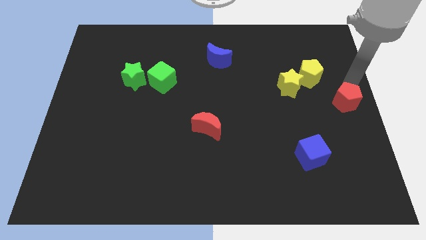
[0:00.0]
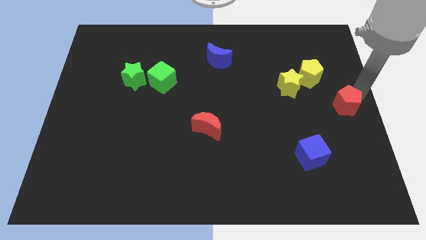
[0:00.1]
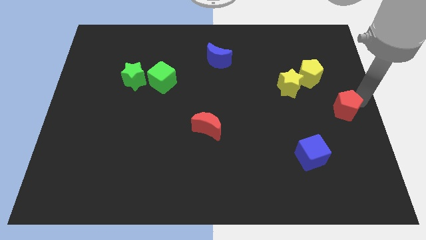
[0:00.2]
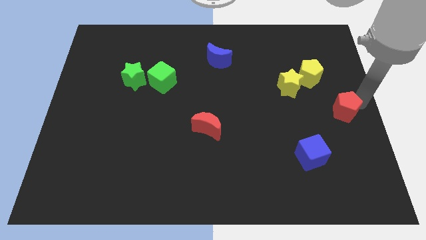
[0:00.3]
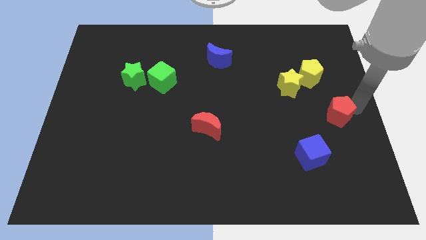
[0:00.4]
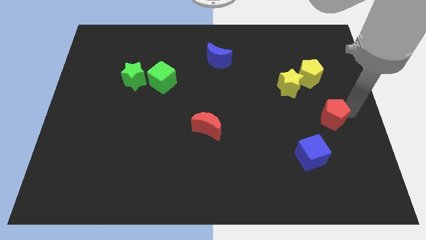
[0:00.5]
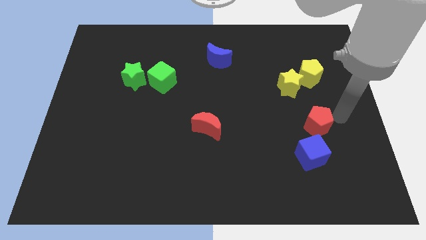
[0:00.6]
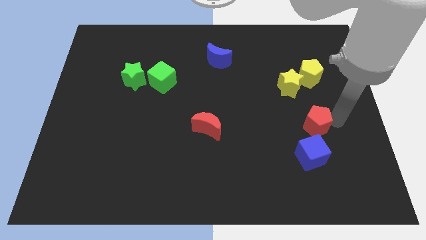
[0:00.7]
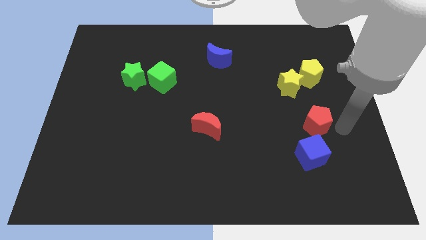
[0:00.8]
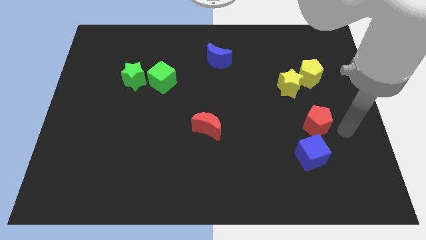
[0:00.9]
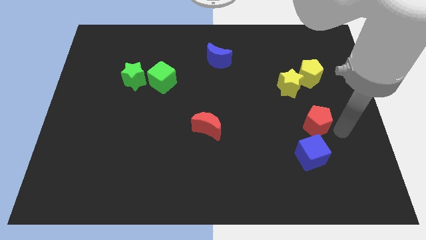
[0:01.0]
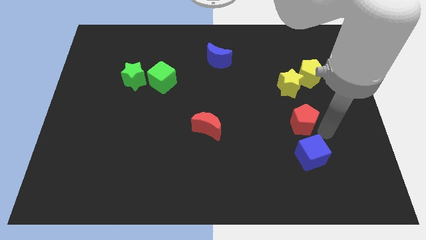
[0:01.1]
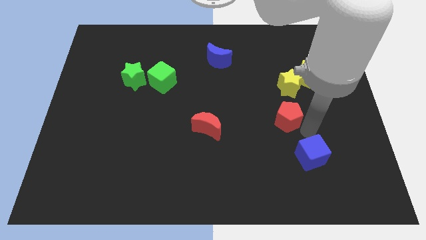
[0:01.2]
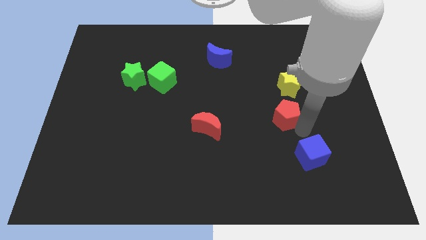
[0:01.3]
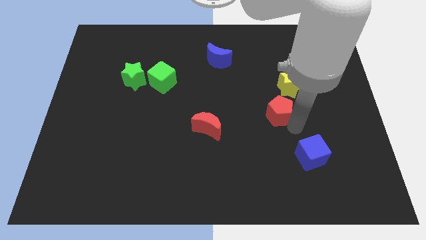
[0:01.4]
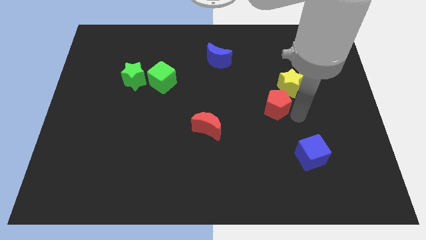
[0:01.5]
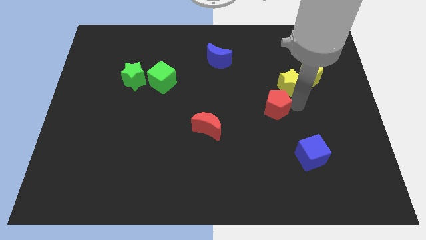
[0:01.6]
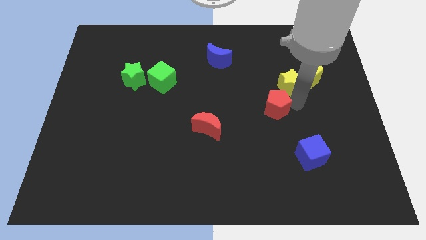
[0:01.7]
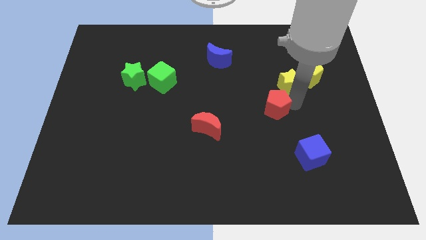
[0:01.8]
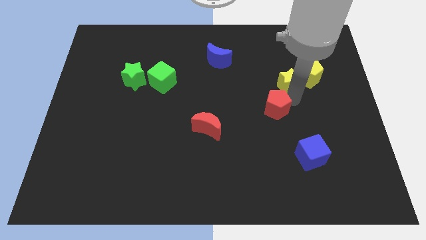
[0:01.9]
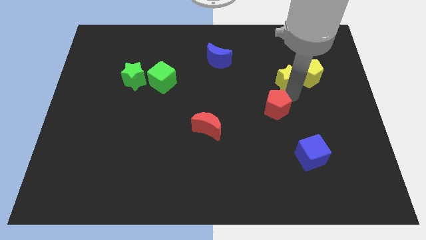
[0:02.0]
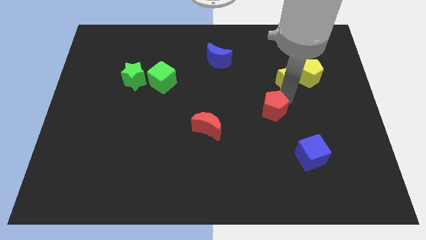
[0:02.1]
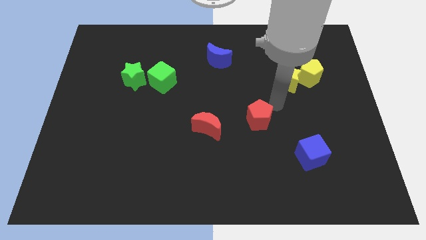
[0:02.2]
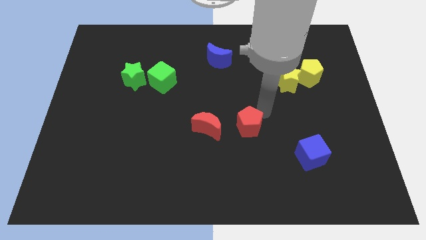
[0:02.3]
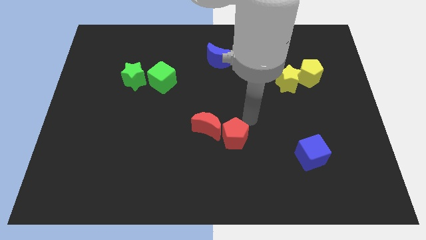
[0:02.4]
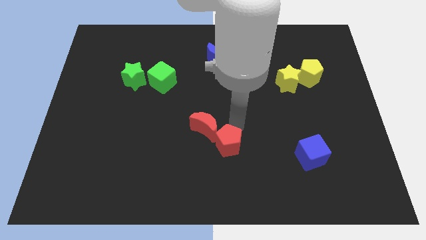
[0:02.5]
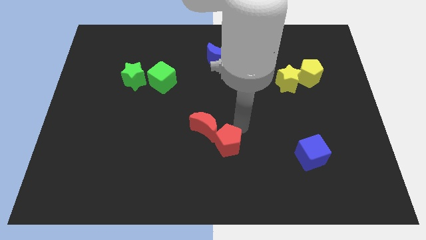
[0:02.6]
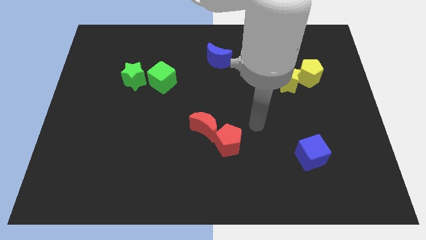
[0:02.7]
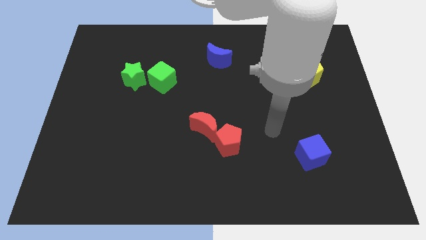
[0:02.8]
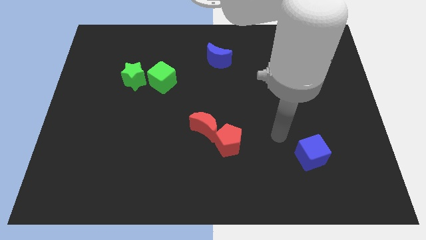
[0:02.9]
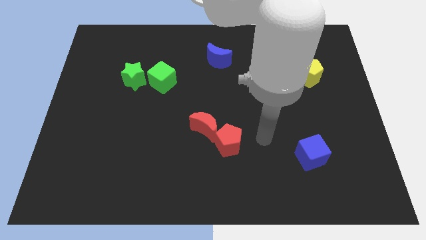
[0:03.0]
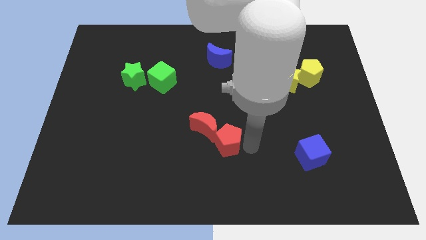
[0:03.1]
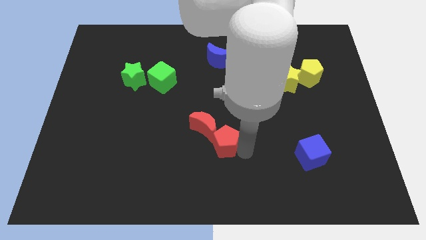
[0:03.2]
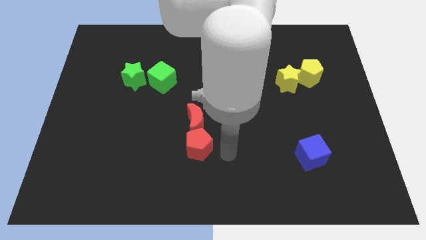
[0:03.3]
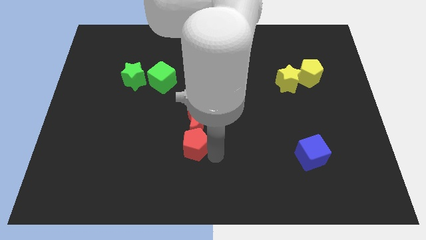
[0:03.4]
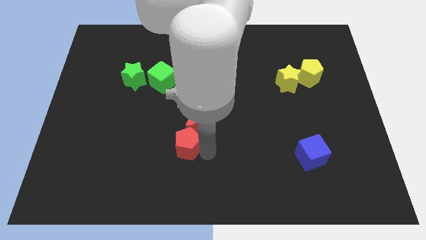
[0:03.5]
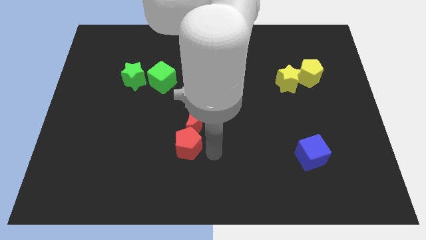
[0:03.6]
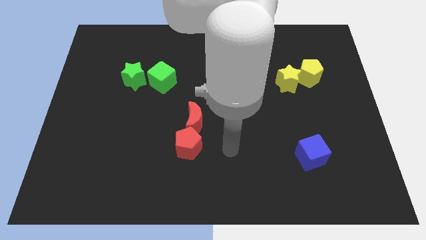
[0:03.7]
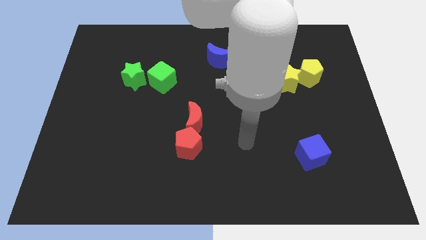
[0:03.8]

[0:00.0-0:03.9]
push the red pentagon to the bottom of red crescent

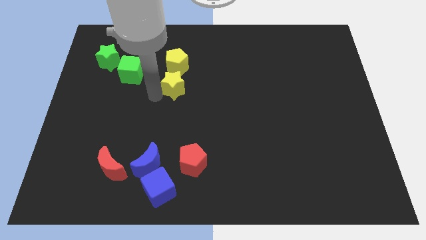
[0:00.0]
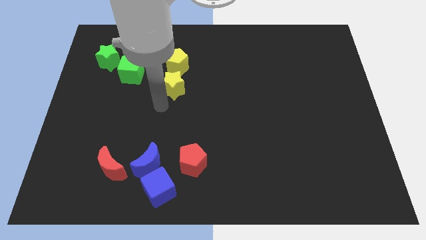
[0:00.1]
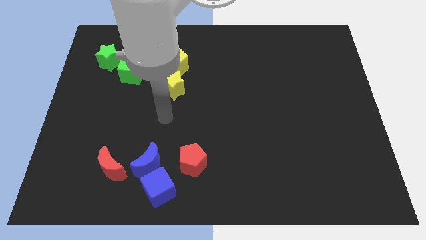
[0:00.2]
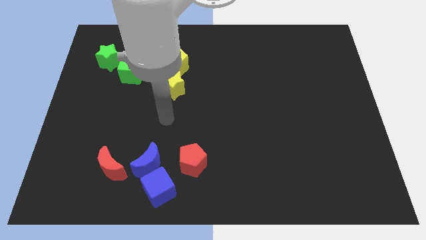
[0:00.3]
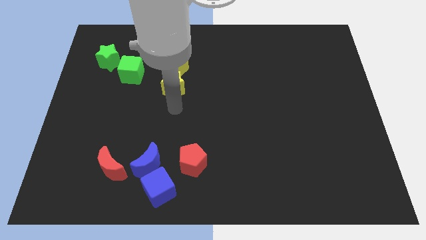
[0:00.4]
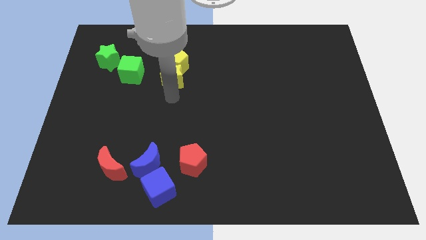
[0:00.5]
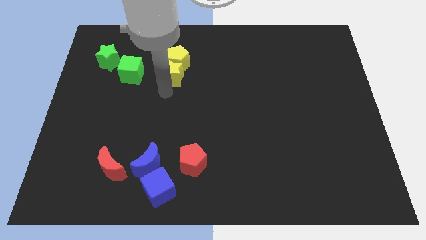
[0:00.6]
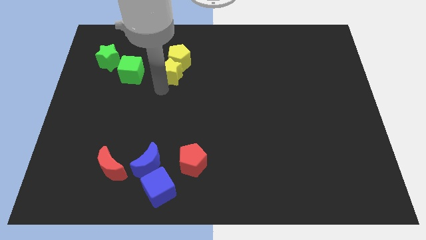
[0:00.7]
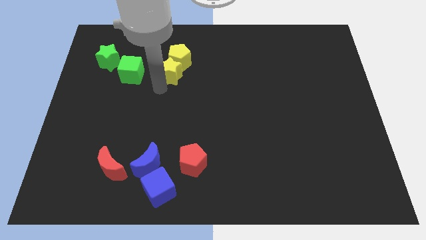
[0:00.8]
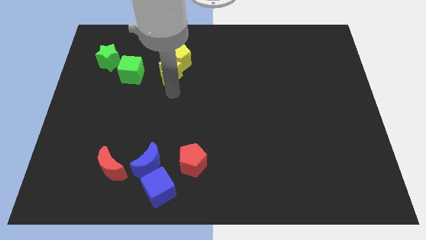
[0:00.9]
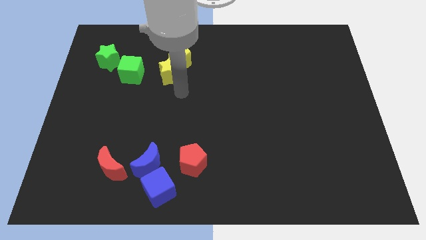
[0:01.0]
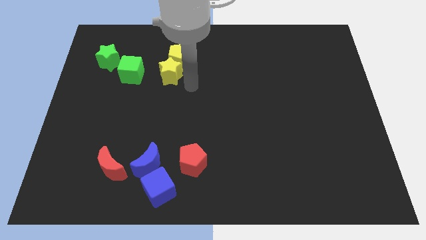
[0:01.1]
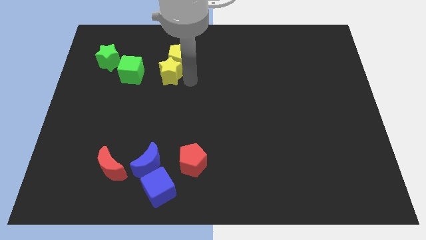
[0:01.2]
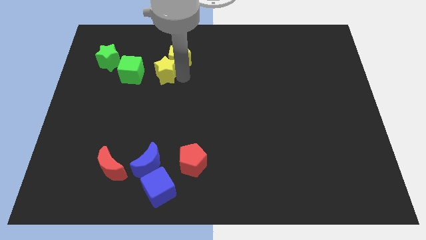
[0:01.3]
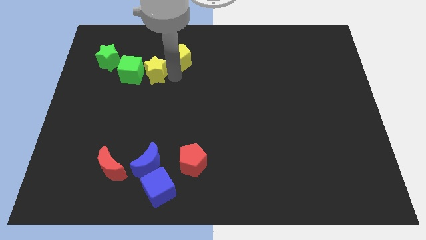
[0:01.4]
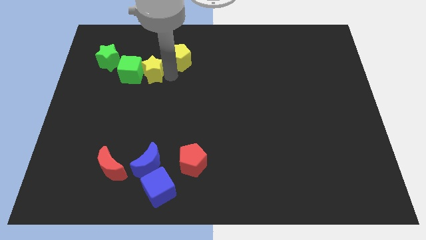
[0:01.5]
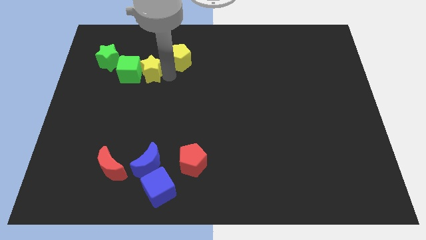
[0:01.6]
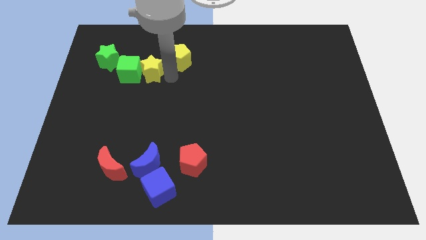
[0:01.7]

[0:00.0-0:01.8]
move the yellow star to the right of the green cube

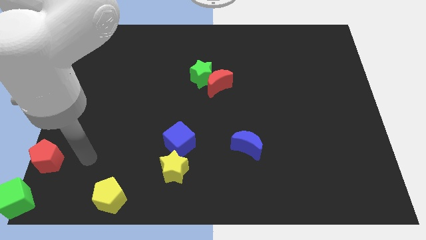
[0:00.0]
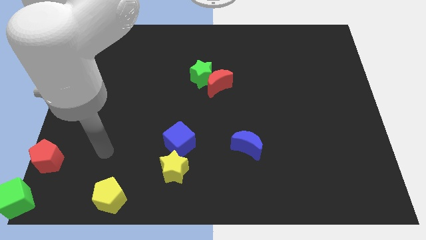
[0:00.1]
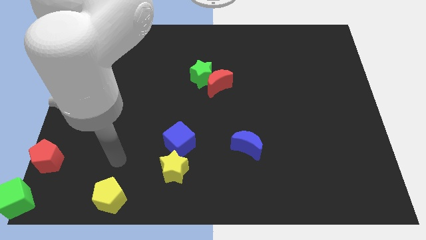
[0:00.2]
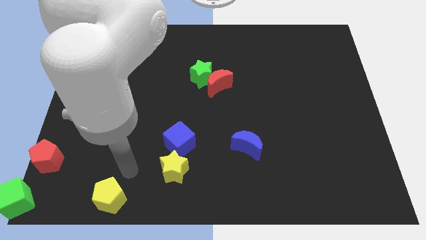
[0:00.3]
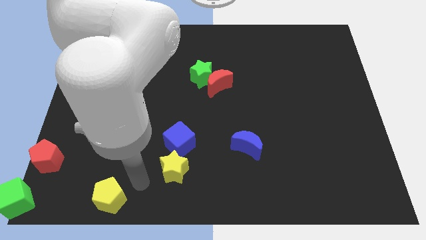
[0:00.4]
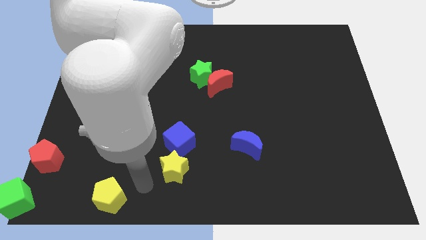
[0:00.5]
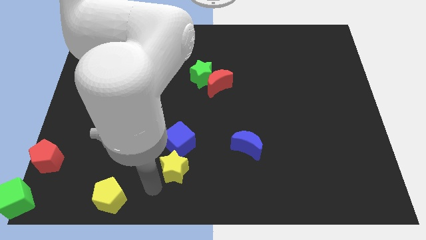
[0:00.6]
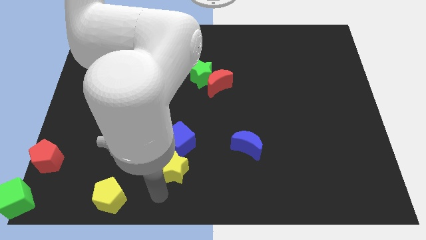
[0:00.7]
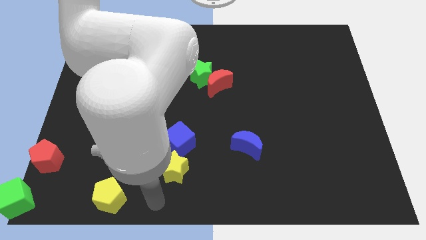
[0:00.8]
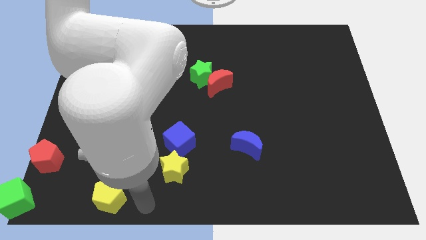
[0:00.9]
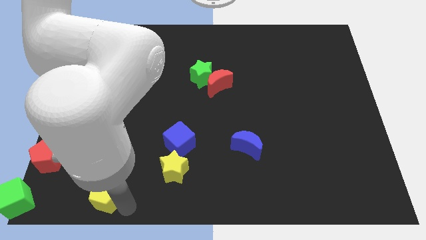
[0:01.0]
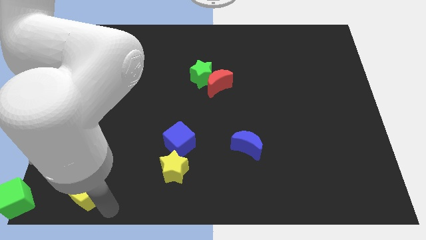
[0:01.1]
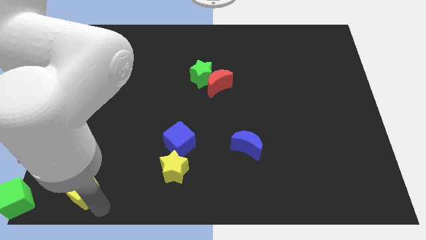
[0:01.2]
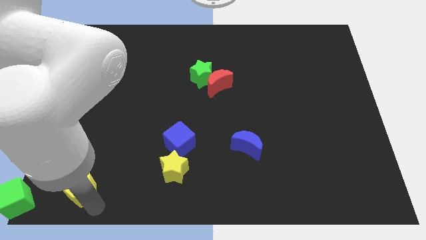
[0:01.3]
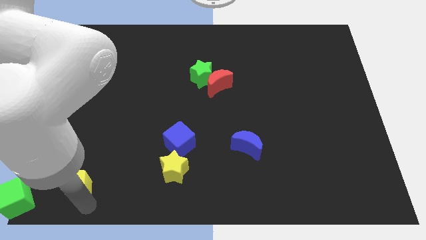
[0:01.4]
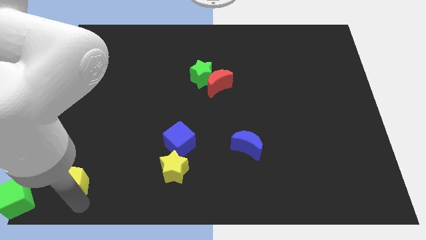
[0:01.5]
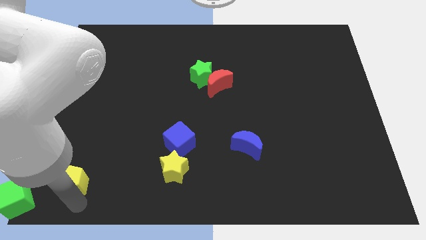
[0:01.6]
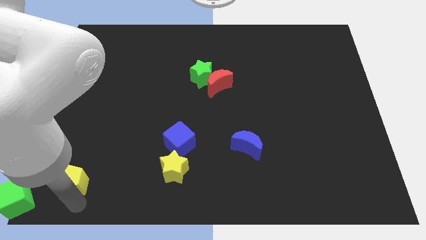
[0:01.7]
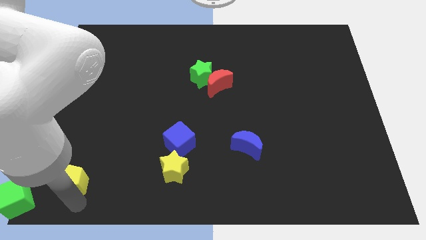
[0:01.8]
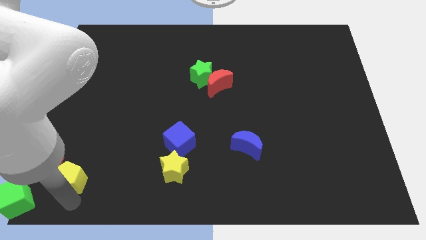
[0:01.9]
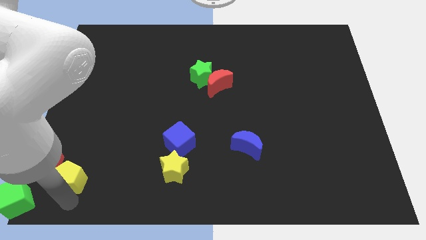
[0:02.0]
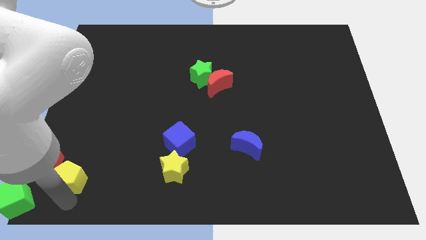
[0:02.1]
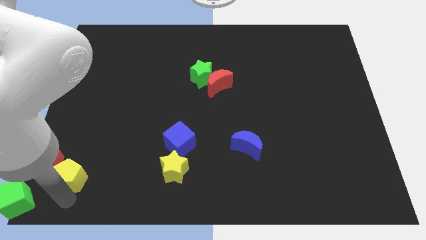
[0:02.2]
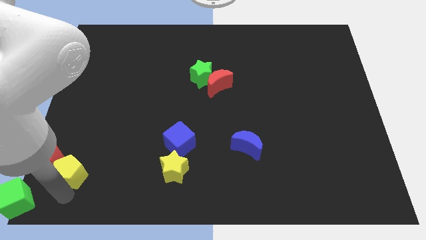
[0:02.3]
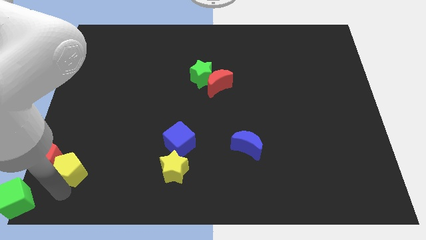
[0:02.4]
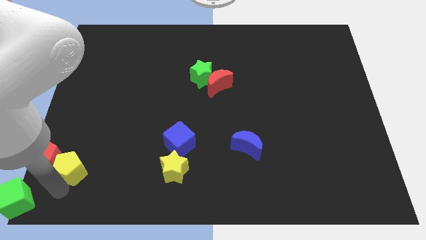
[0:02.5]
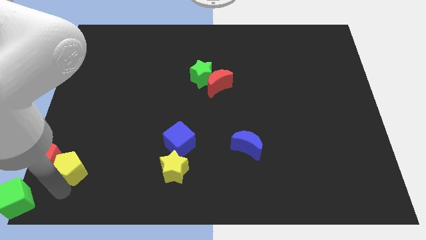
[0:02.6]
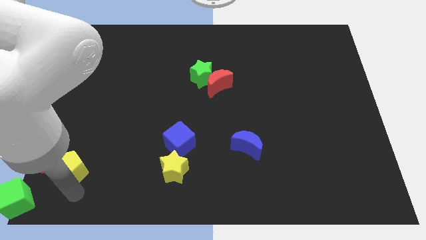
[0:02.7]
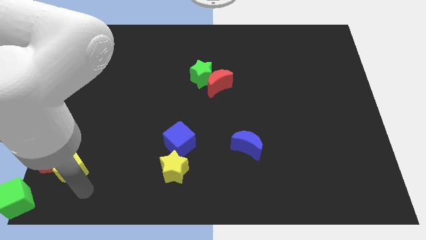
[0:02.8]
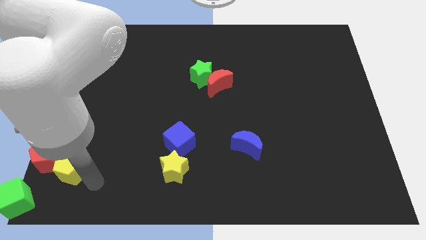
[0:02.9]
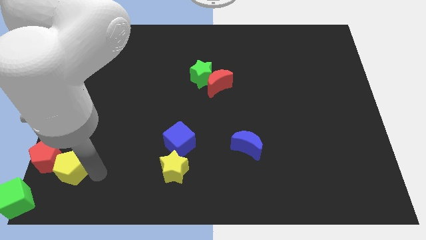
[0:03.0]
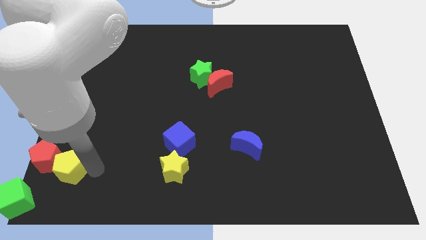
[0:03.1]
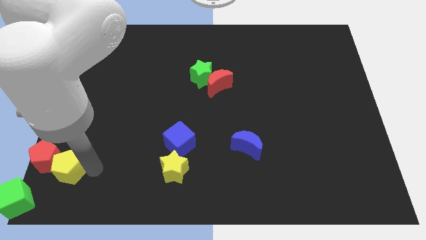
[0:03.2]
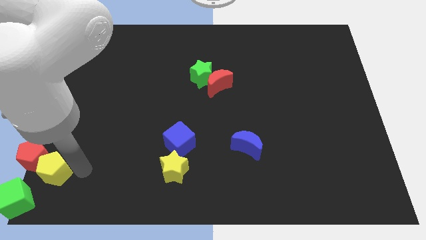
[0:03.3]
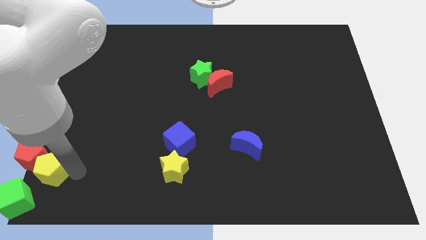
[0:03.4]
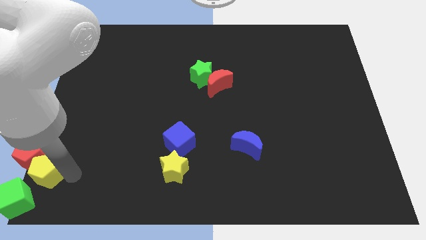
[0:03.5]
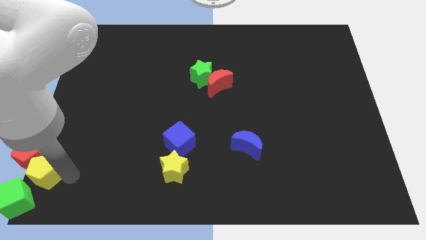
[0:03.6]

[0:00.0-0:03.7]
push the yellow pentagon into the red pentagon
